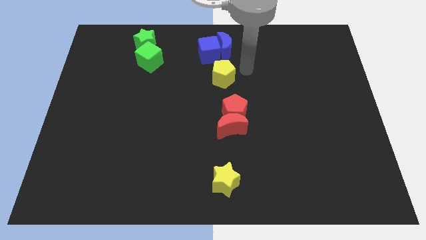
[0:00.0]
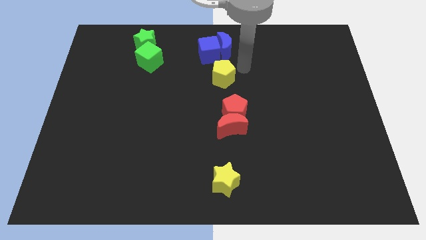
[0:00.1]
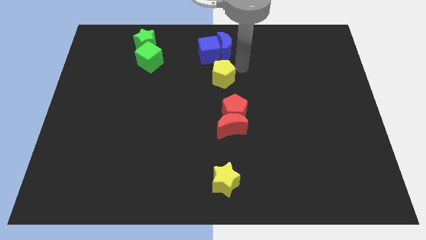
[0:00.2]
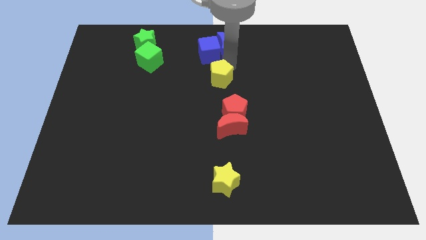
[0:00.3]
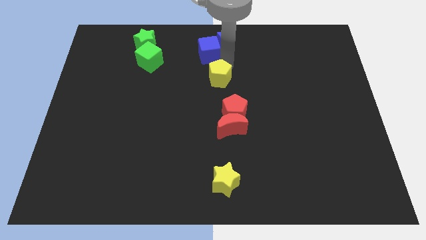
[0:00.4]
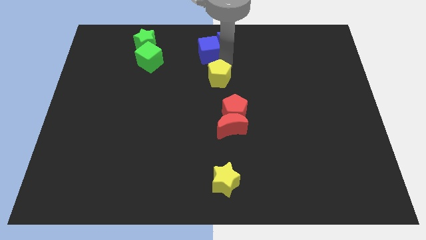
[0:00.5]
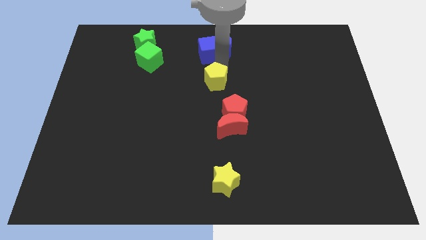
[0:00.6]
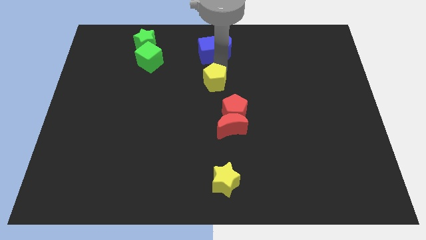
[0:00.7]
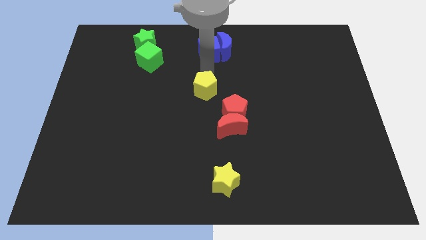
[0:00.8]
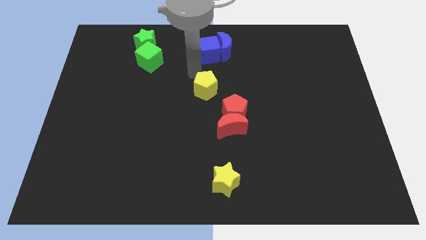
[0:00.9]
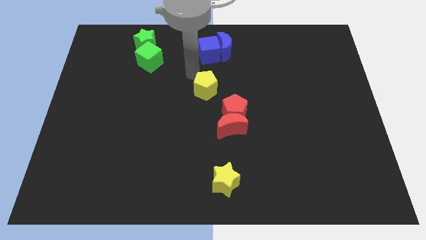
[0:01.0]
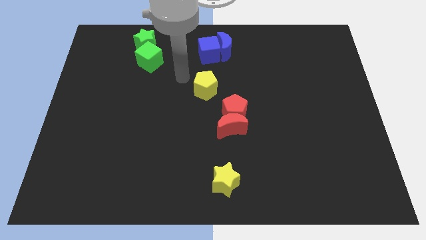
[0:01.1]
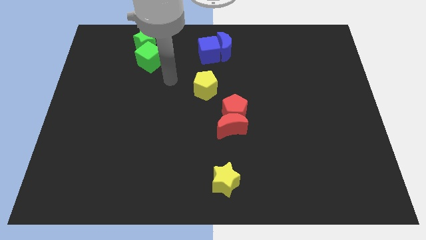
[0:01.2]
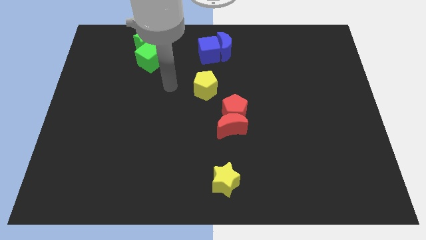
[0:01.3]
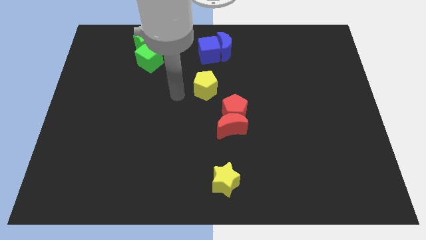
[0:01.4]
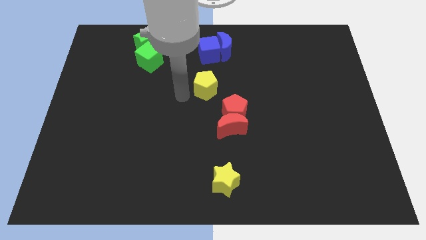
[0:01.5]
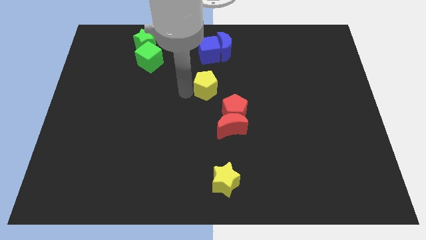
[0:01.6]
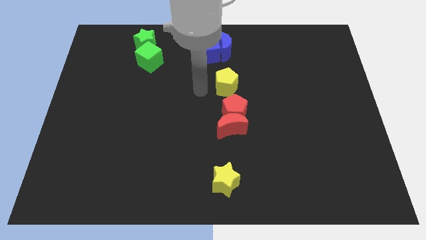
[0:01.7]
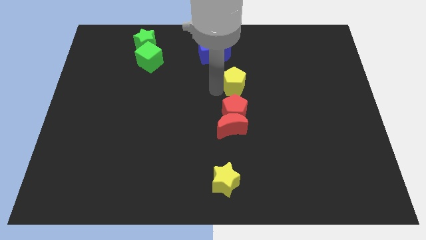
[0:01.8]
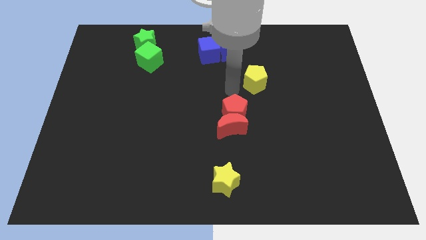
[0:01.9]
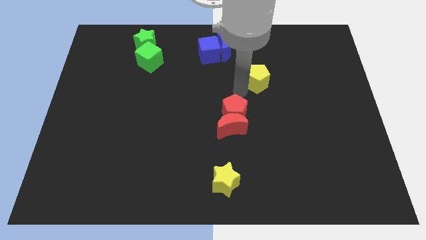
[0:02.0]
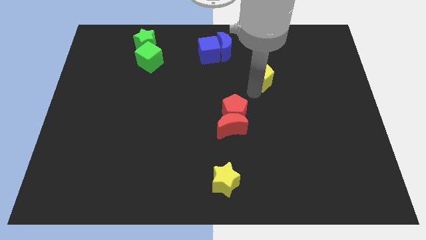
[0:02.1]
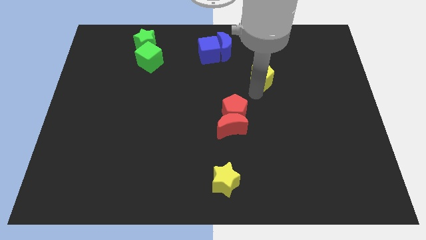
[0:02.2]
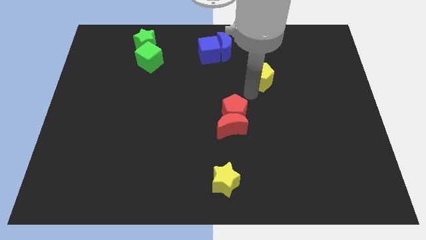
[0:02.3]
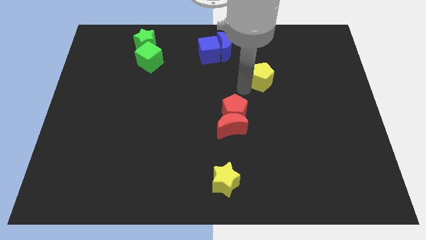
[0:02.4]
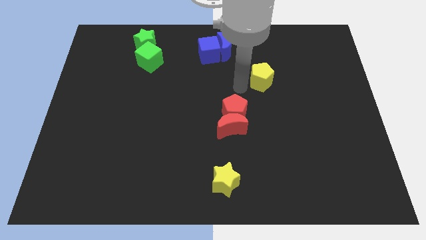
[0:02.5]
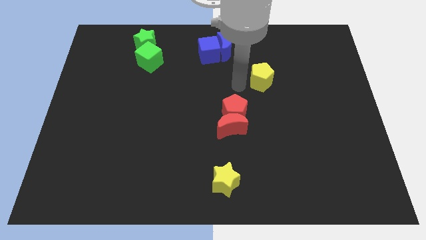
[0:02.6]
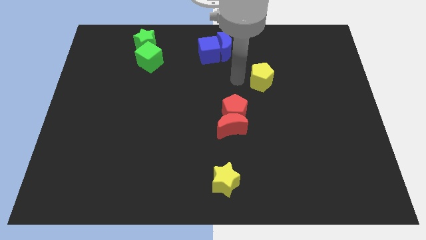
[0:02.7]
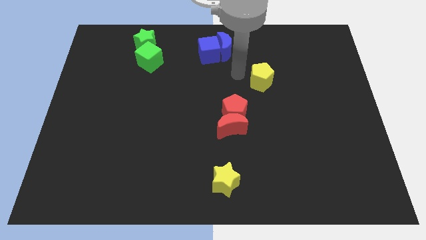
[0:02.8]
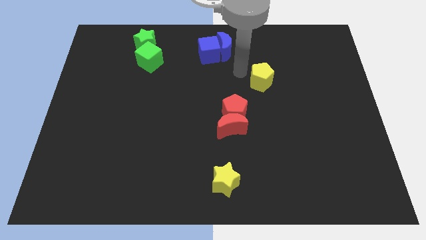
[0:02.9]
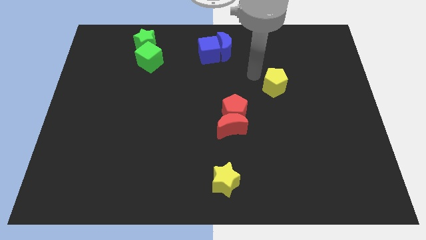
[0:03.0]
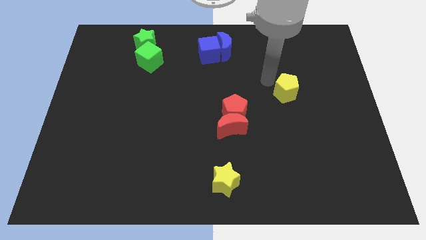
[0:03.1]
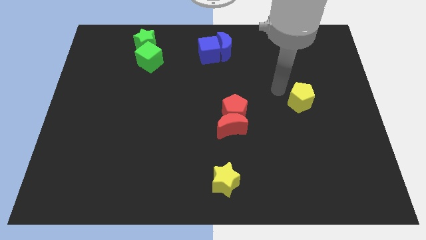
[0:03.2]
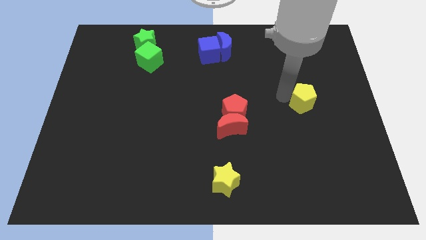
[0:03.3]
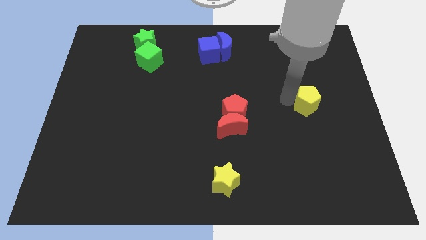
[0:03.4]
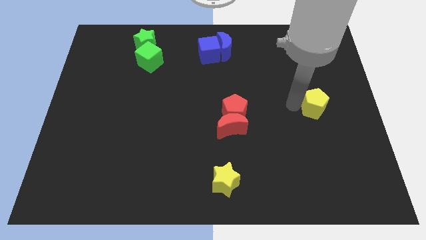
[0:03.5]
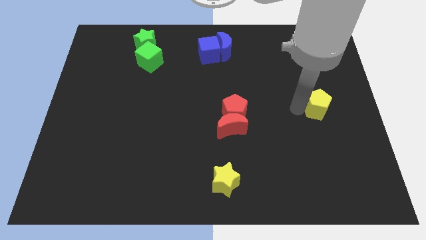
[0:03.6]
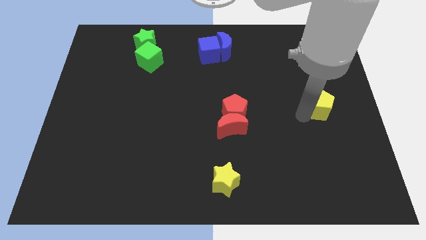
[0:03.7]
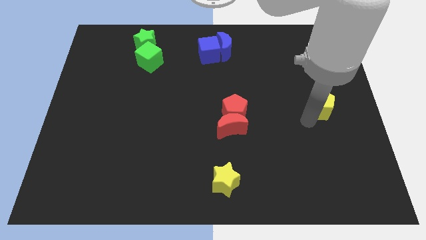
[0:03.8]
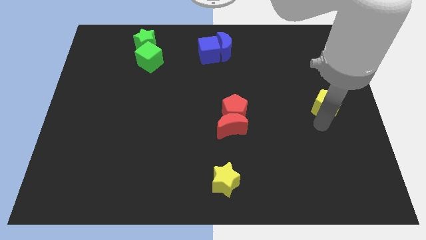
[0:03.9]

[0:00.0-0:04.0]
place the yellow pentagon to the right of the red pentagon

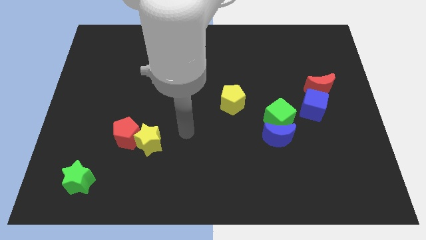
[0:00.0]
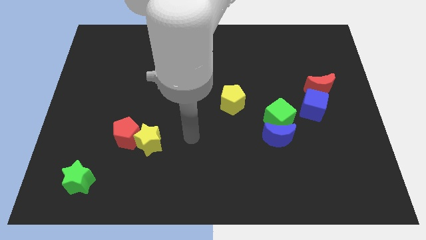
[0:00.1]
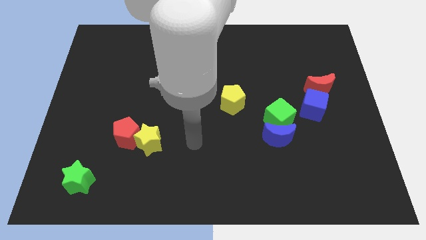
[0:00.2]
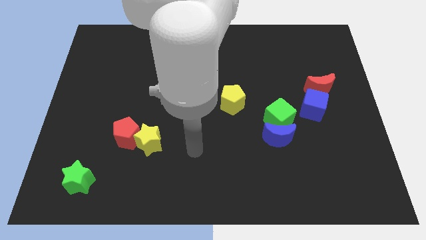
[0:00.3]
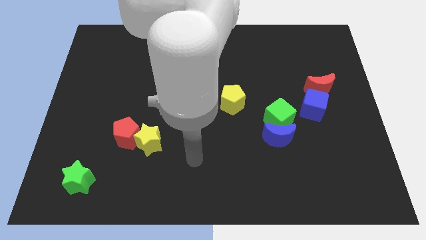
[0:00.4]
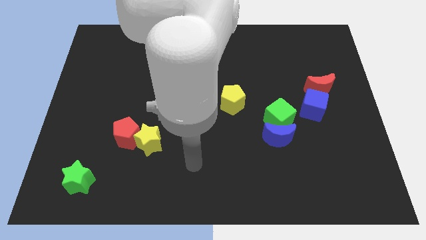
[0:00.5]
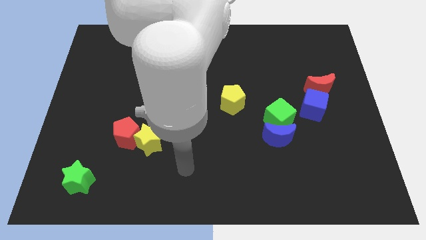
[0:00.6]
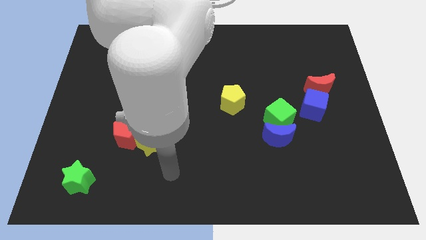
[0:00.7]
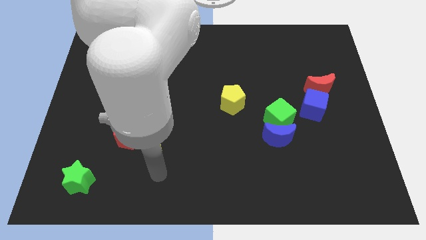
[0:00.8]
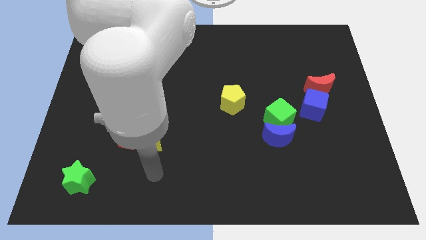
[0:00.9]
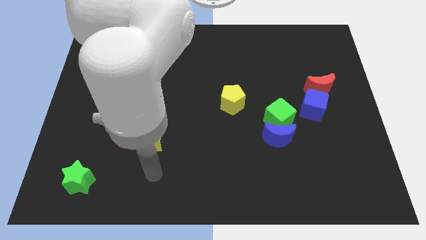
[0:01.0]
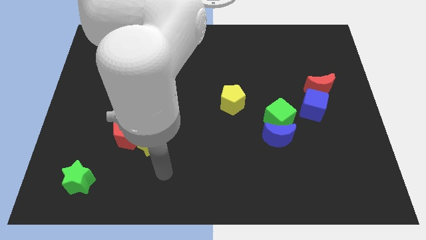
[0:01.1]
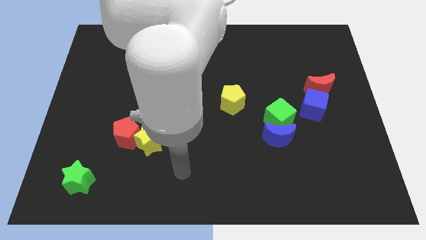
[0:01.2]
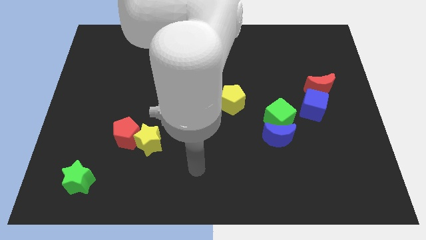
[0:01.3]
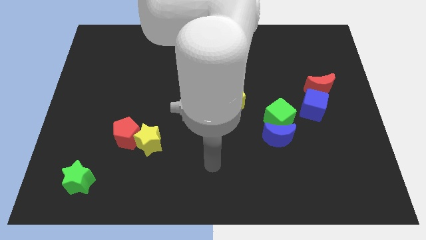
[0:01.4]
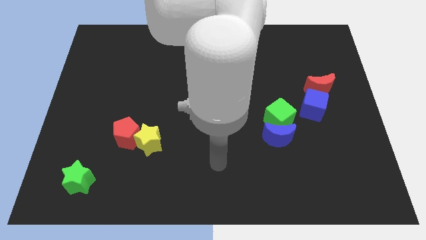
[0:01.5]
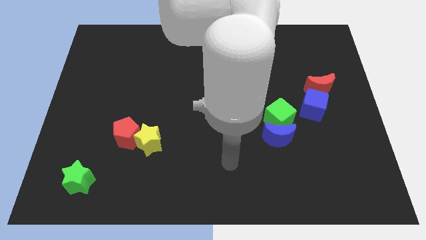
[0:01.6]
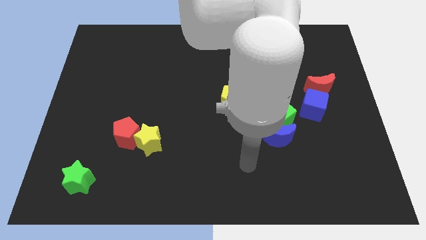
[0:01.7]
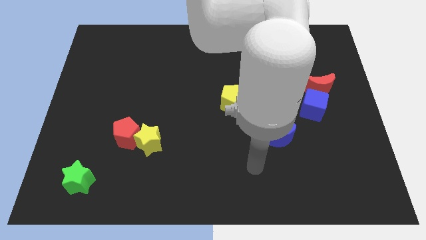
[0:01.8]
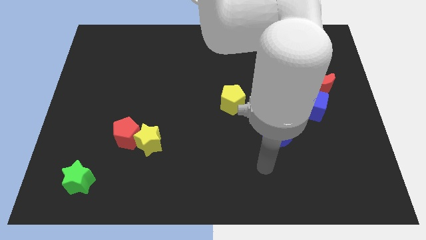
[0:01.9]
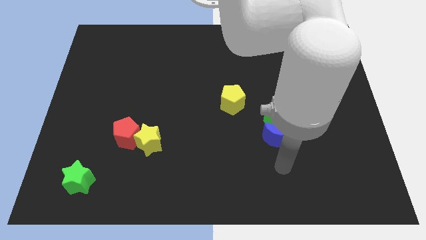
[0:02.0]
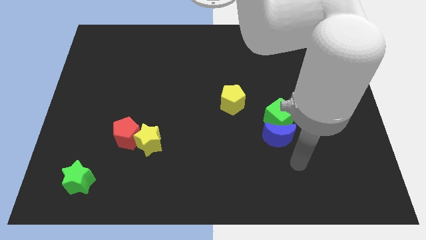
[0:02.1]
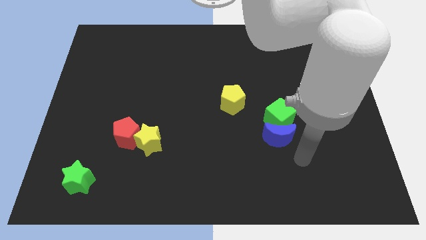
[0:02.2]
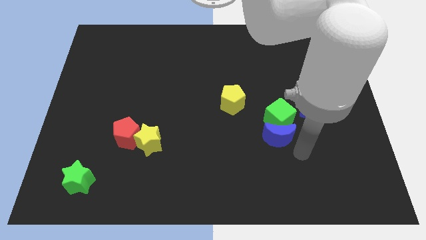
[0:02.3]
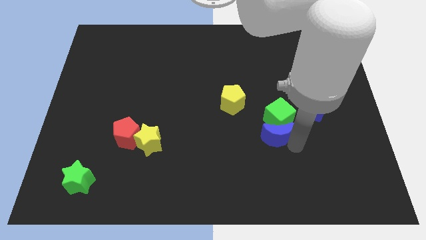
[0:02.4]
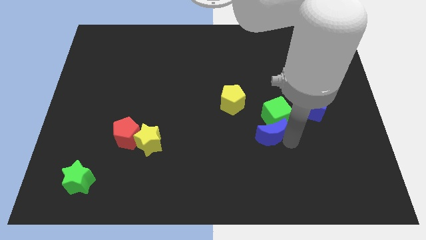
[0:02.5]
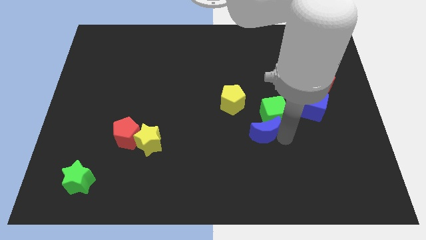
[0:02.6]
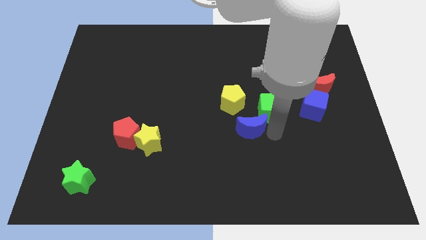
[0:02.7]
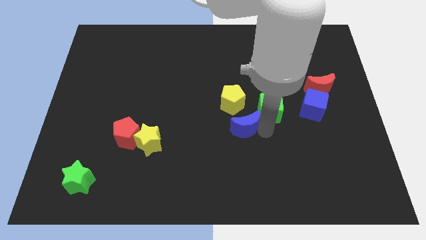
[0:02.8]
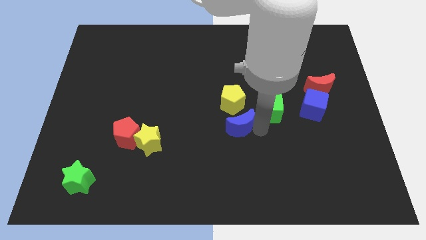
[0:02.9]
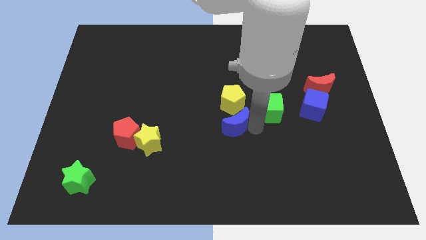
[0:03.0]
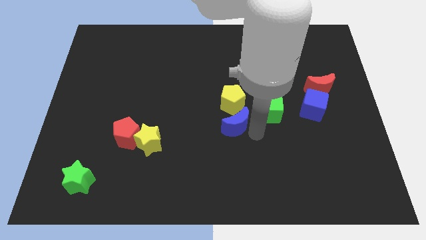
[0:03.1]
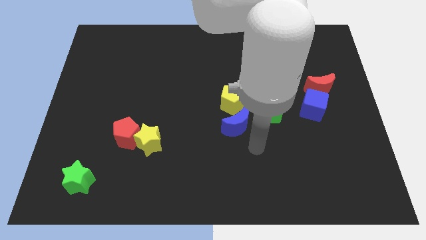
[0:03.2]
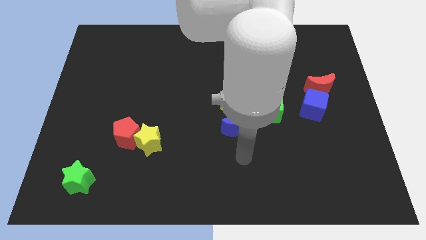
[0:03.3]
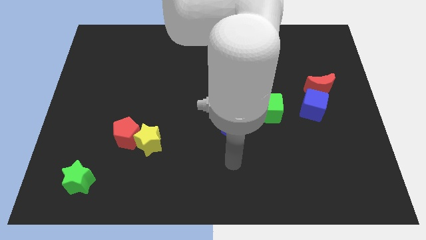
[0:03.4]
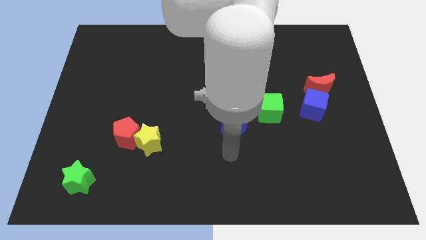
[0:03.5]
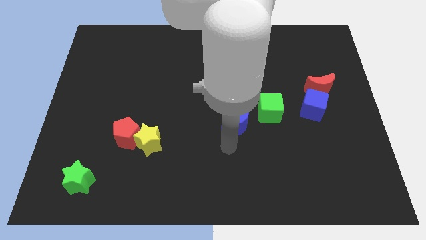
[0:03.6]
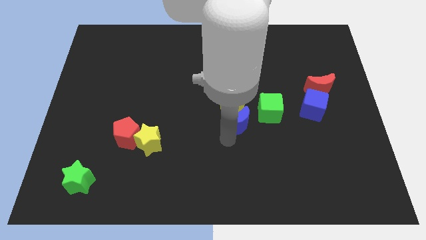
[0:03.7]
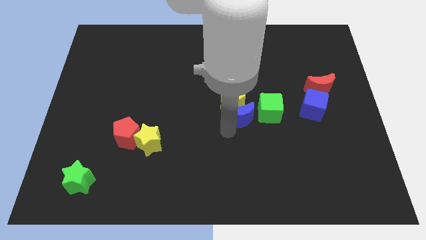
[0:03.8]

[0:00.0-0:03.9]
separate blue crescent from green cube

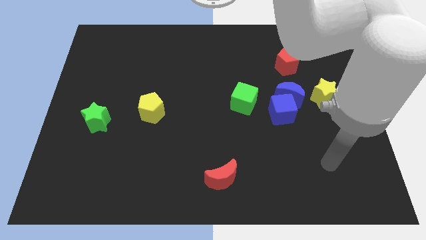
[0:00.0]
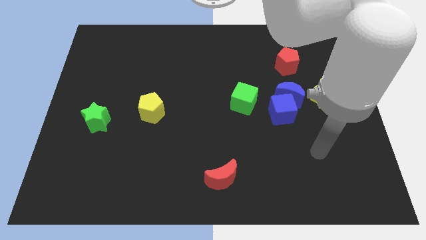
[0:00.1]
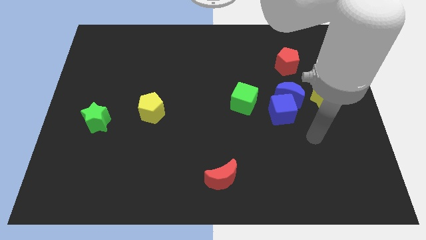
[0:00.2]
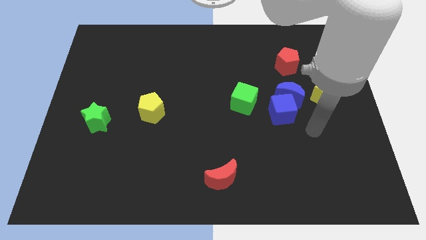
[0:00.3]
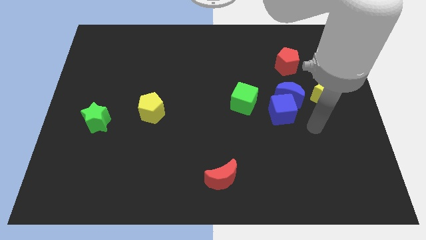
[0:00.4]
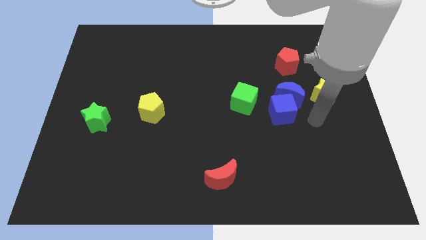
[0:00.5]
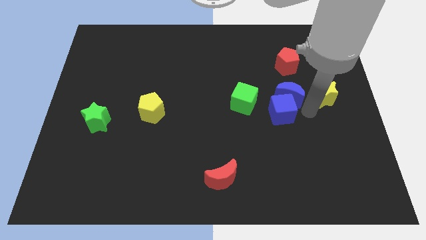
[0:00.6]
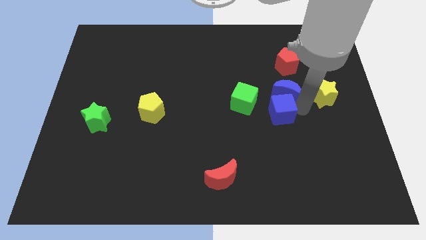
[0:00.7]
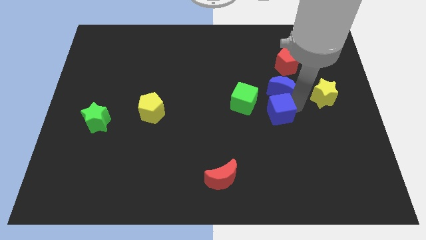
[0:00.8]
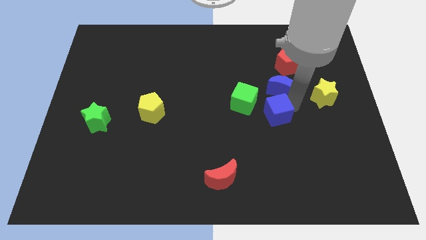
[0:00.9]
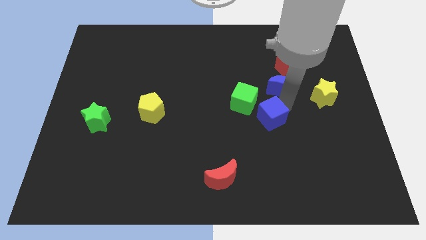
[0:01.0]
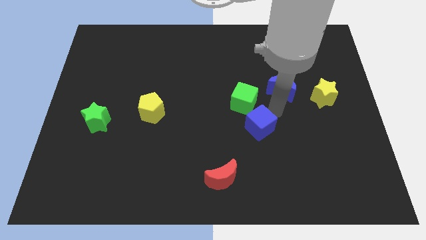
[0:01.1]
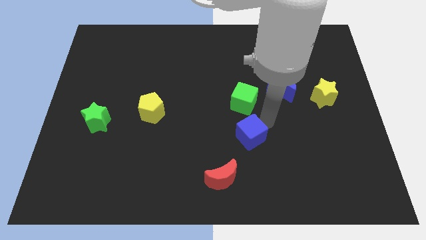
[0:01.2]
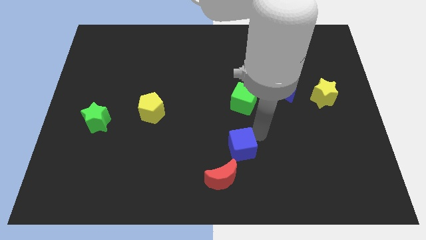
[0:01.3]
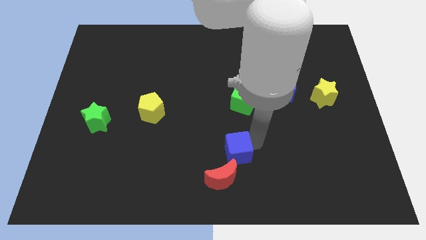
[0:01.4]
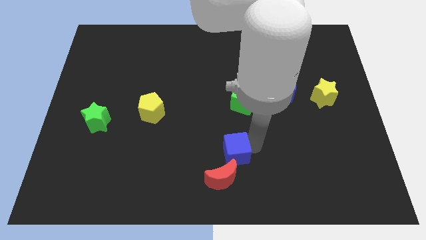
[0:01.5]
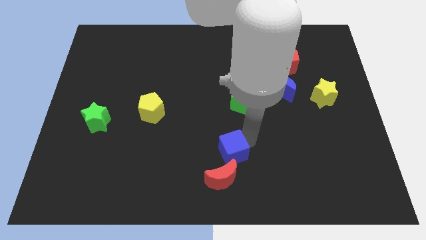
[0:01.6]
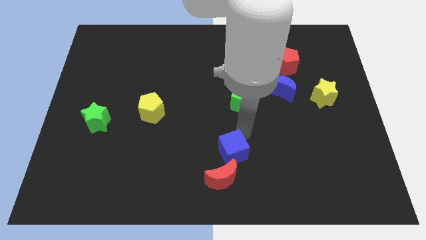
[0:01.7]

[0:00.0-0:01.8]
place the blue cube above the red crescent
